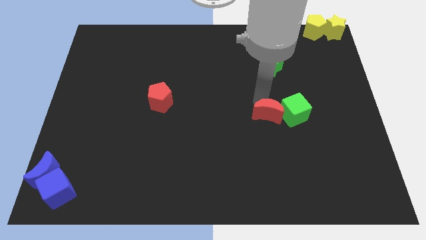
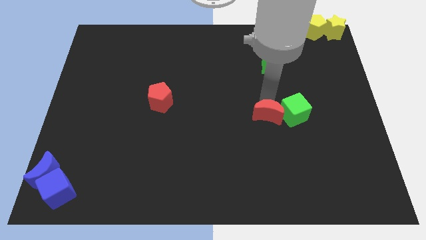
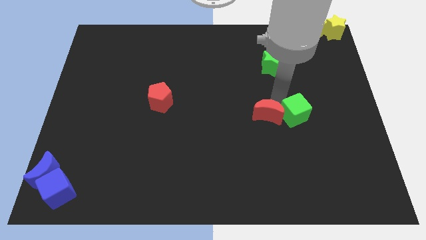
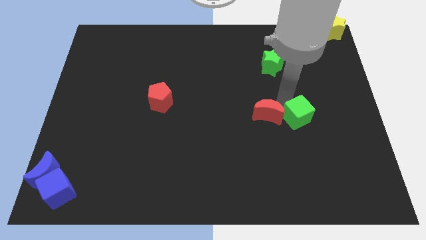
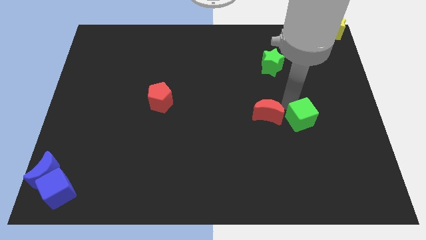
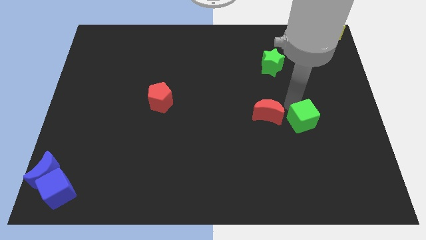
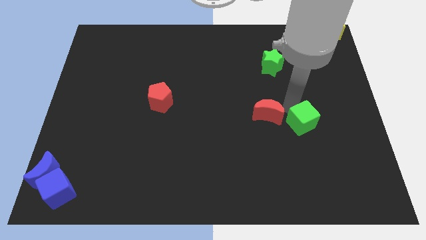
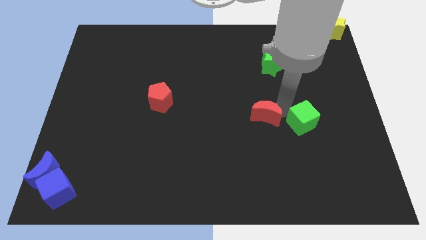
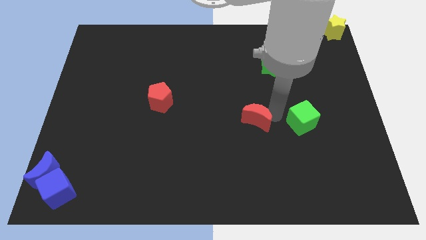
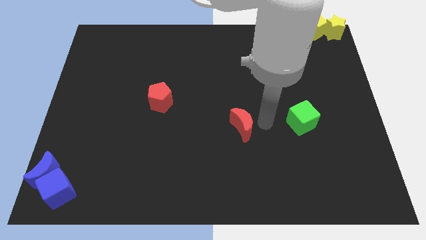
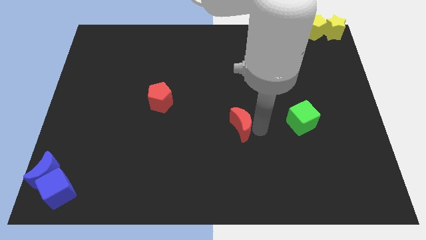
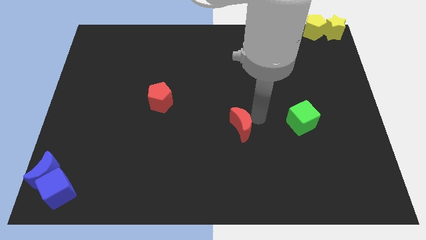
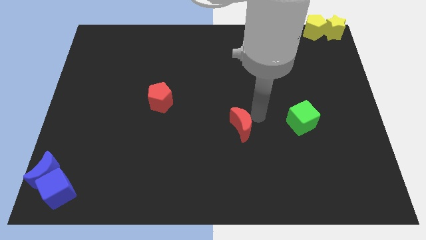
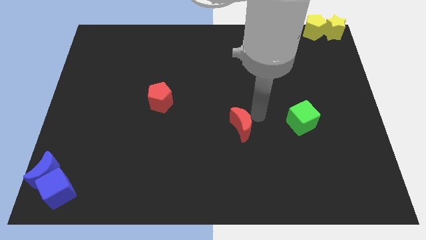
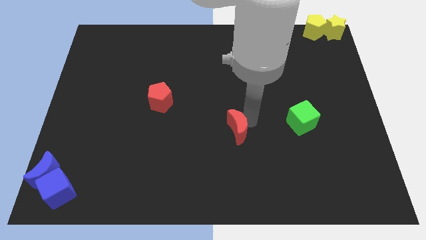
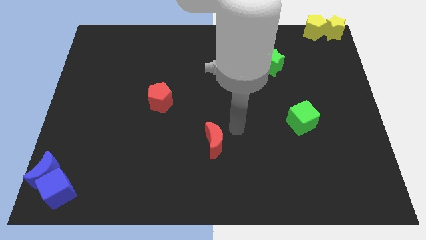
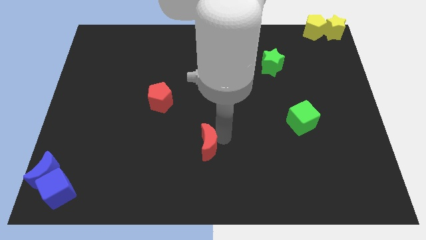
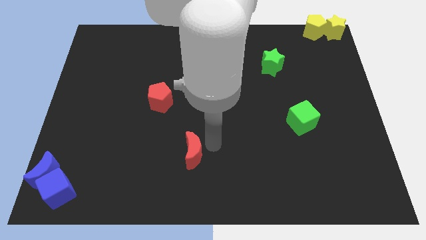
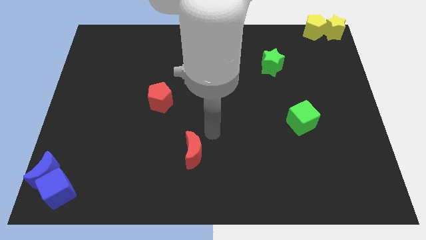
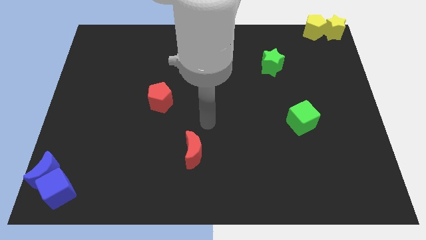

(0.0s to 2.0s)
move the red moon diagonally bottom left to the green cube

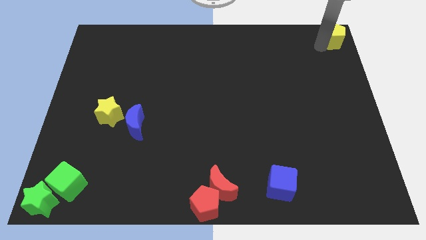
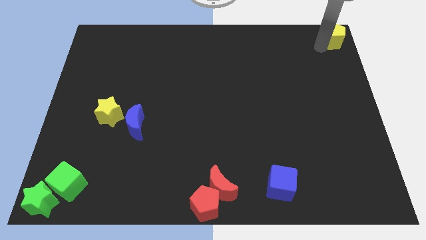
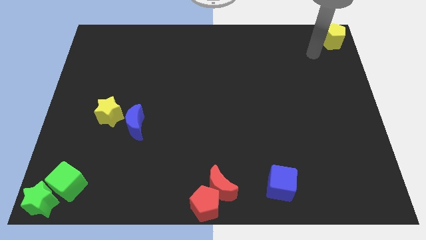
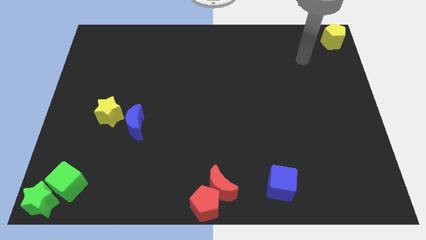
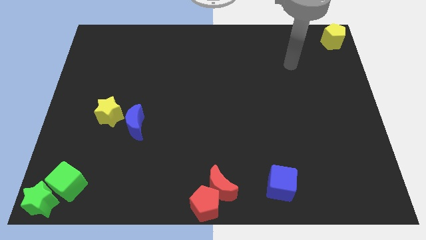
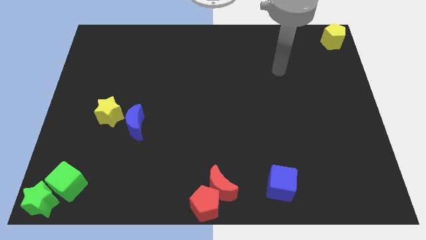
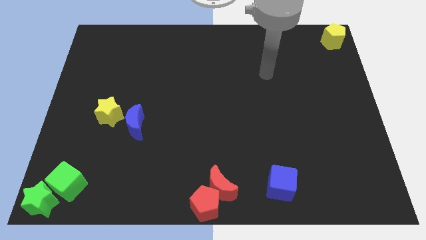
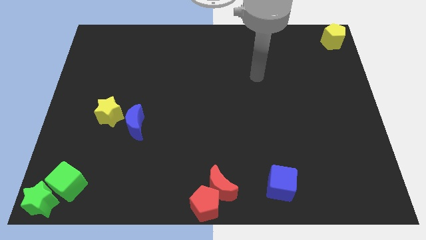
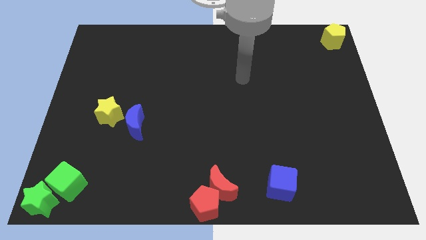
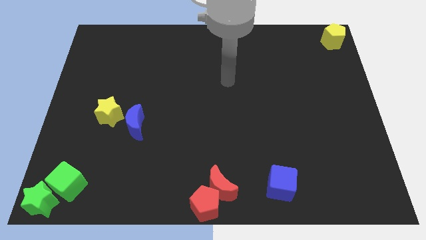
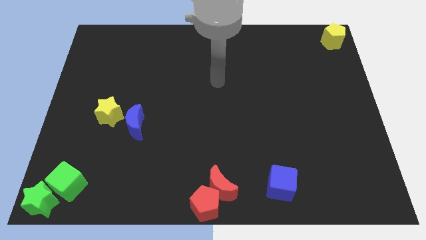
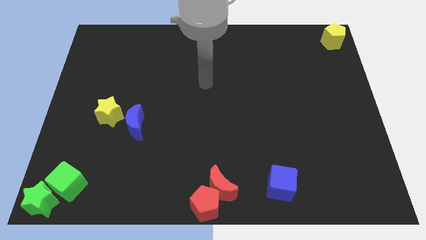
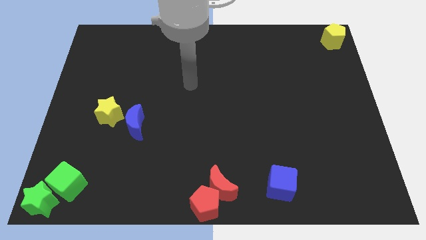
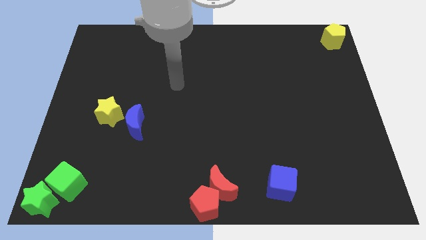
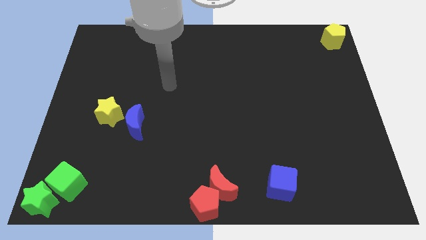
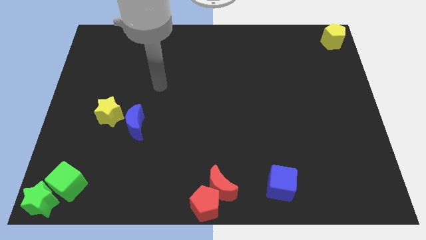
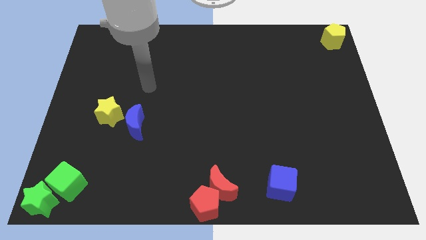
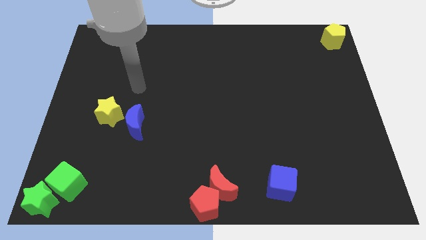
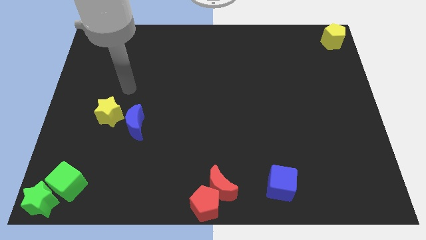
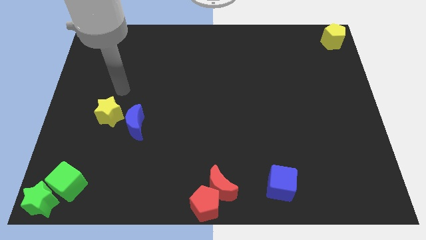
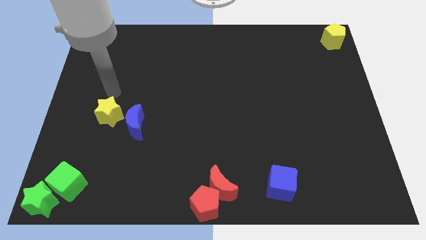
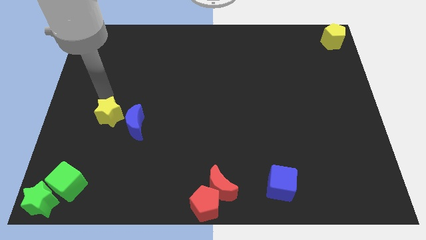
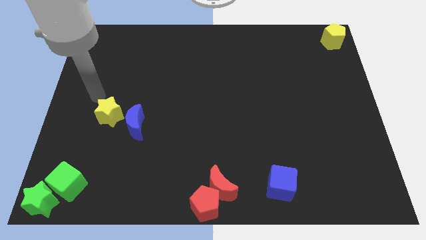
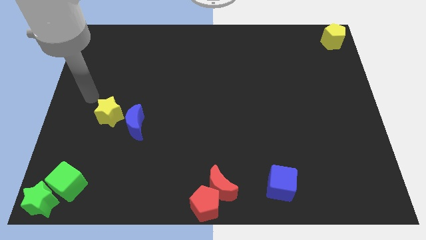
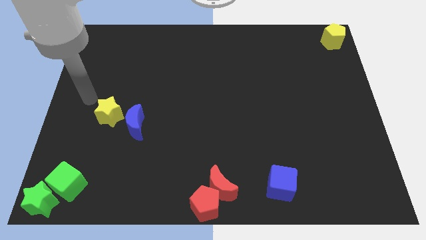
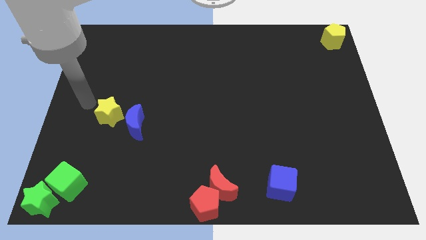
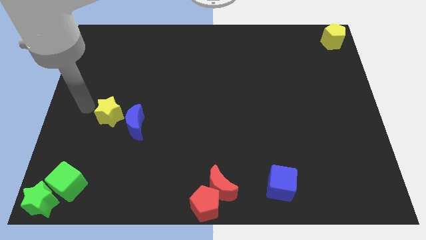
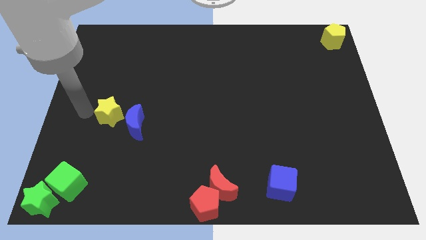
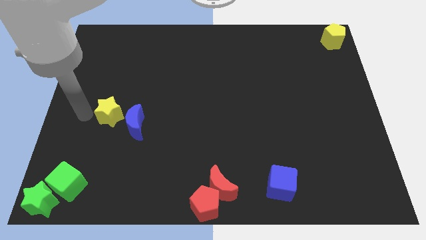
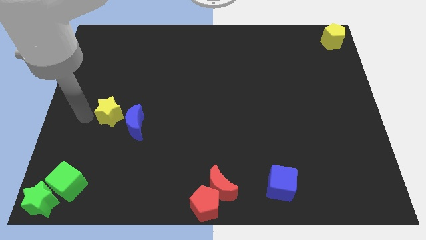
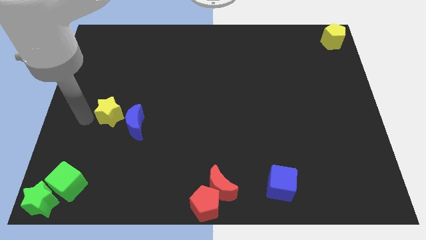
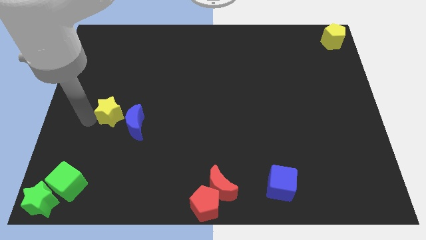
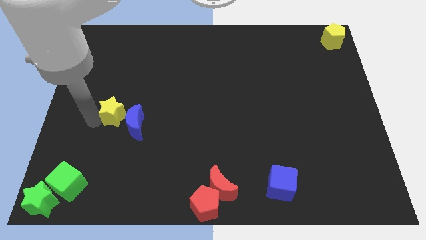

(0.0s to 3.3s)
place your arm left to the yellow star

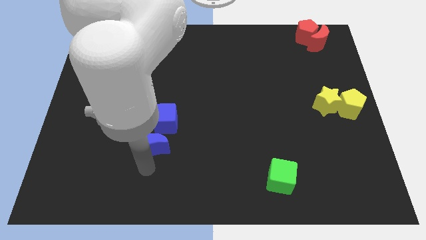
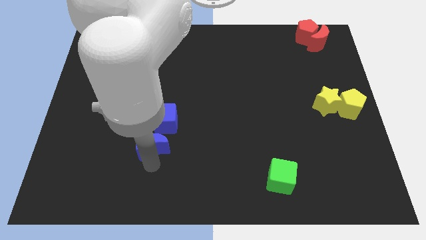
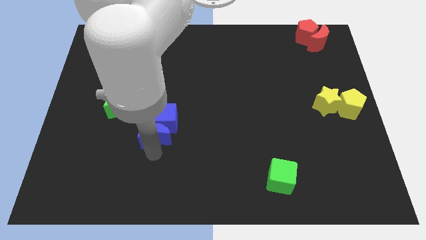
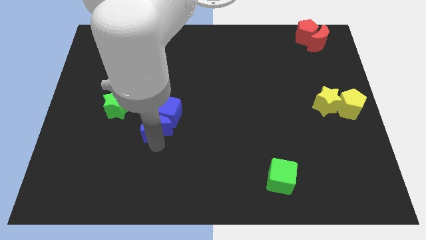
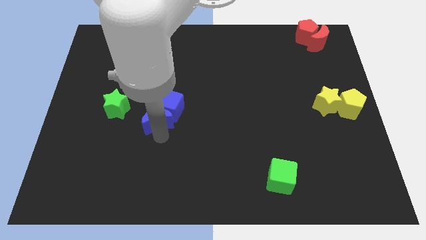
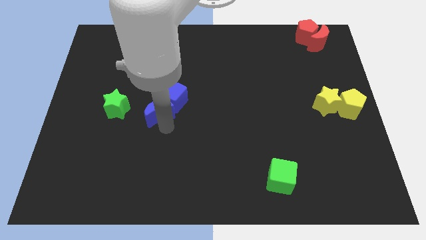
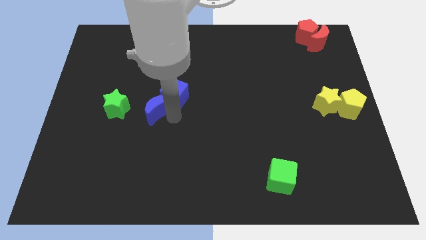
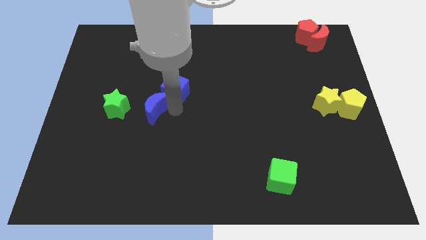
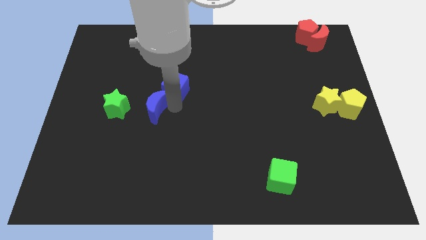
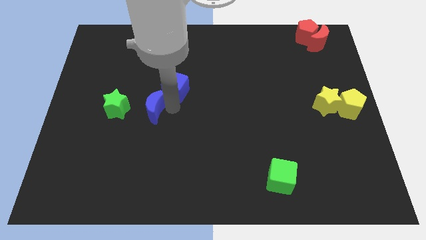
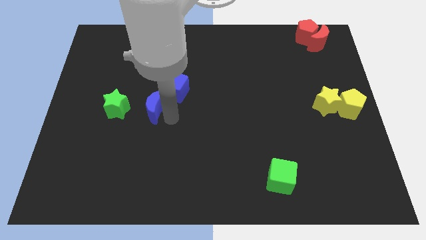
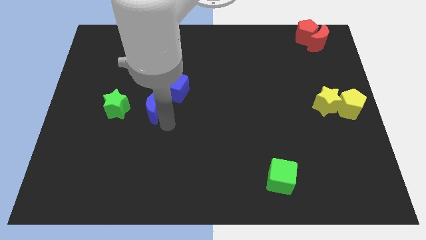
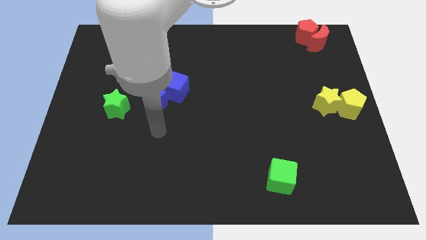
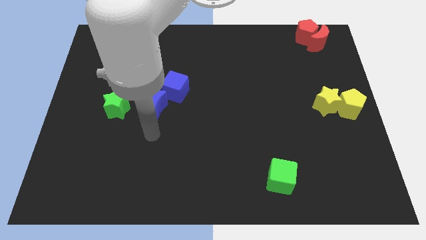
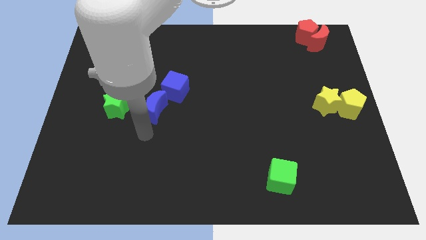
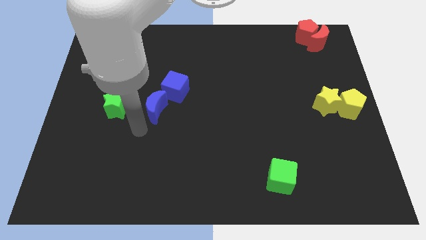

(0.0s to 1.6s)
push the blue crescent into blue cube

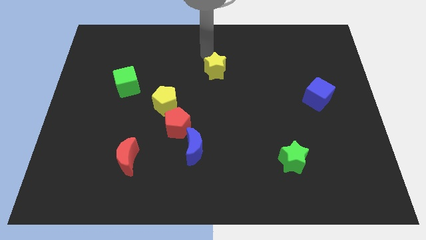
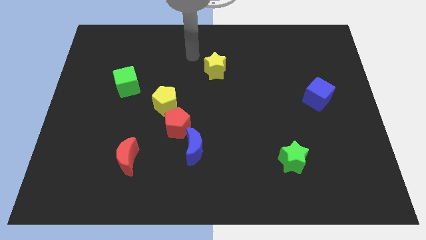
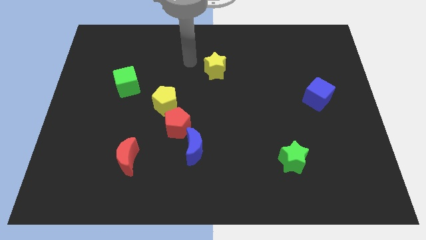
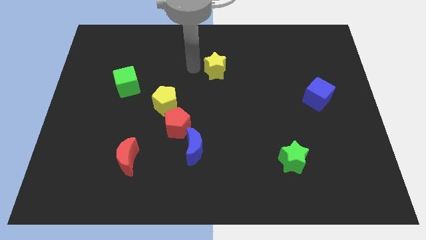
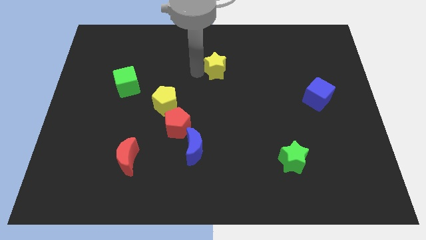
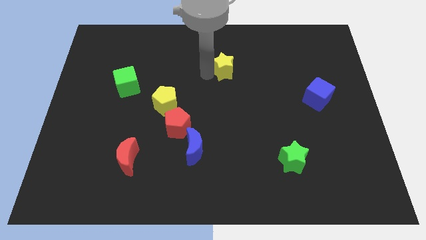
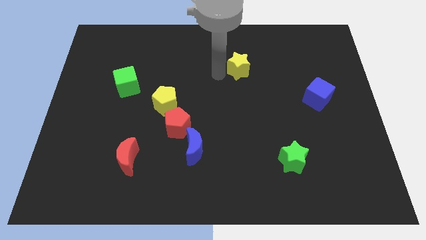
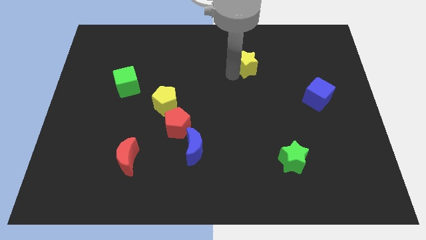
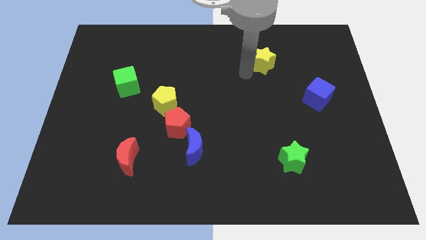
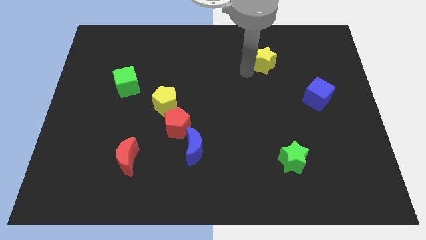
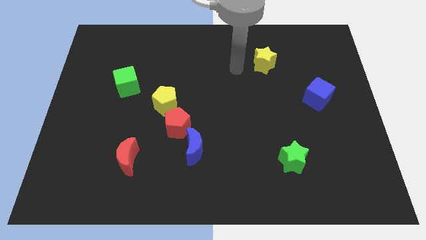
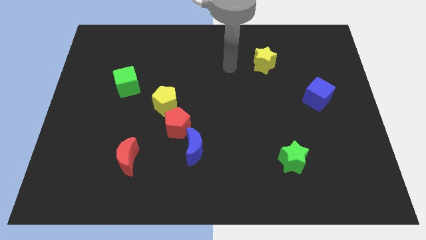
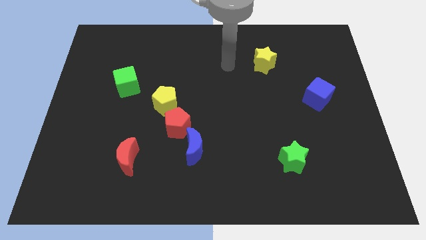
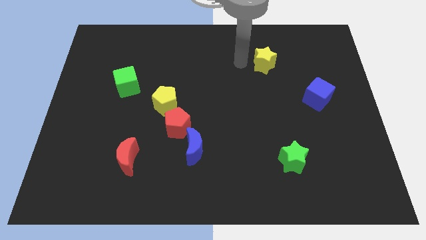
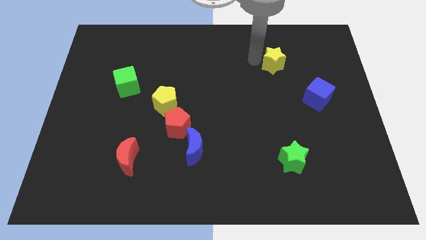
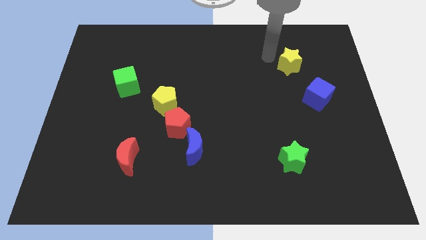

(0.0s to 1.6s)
push the yellow star diagonal to the blue cube

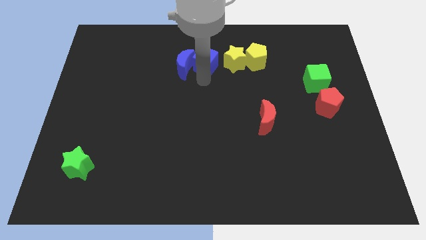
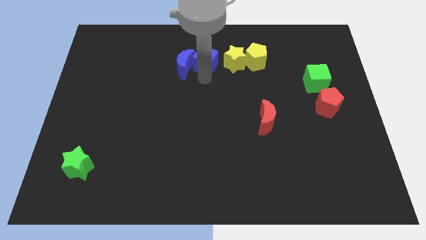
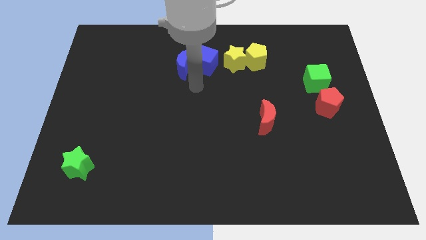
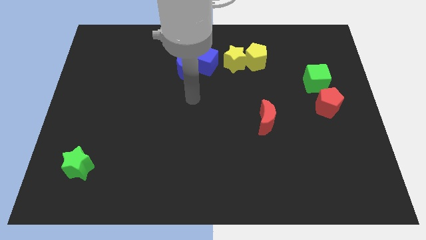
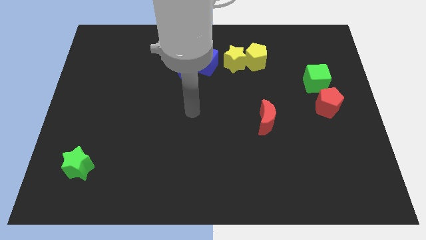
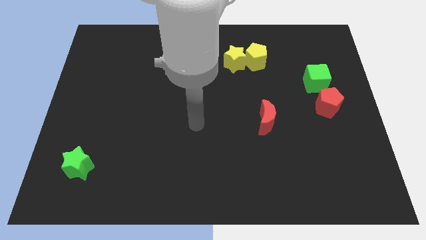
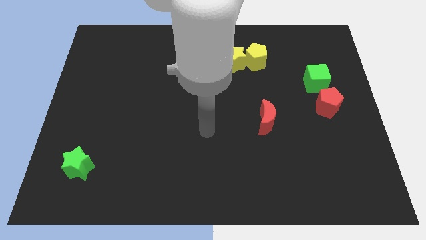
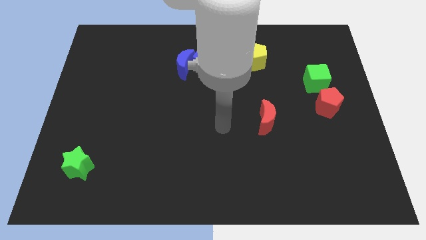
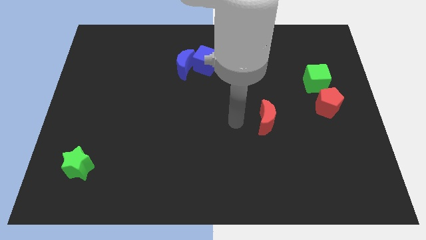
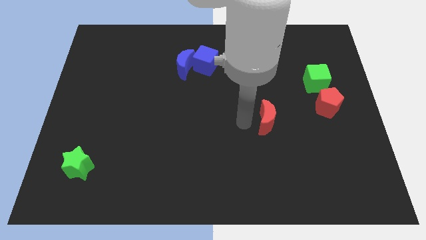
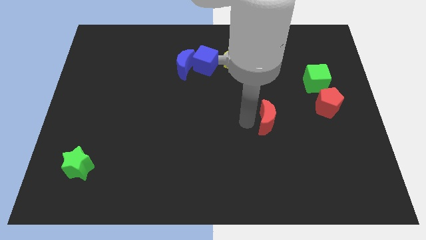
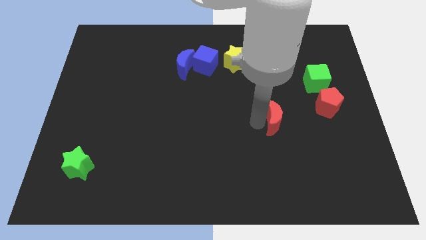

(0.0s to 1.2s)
move your arm to the left of the red crescent
